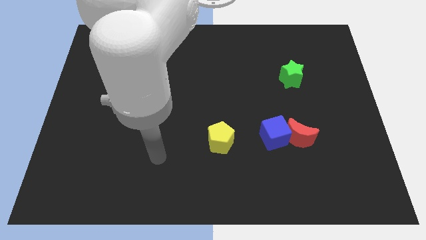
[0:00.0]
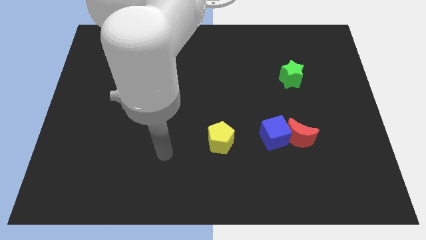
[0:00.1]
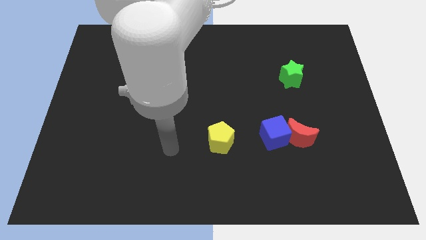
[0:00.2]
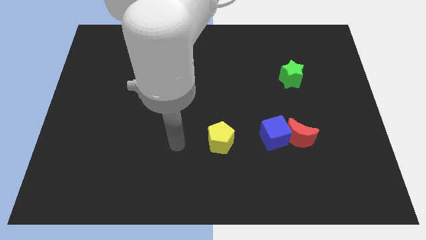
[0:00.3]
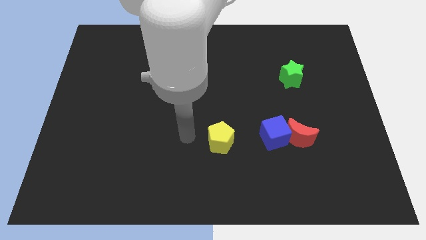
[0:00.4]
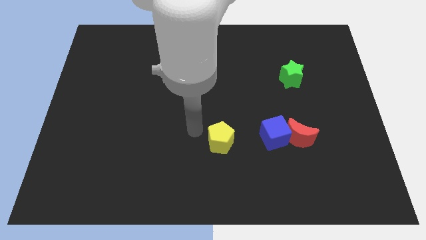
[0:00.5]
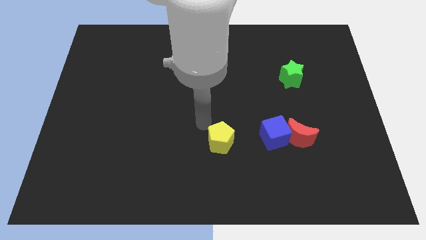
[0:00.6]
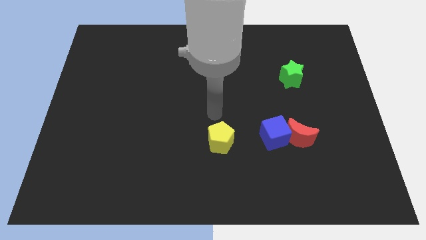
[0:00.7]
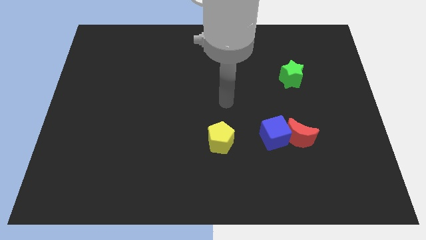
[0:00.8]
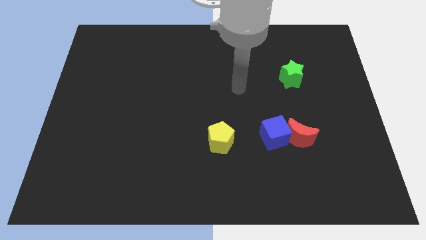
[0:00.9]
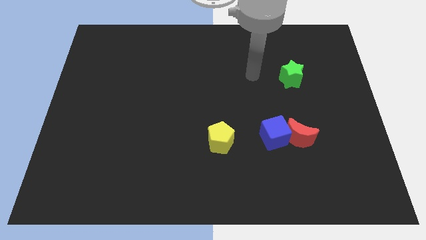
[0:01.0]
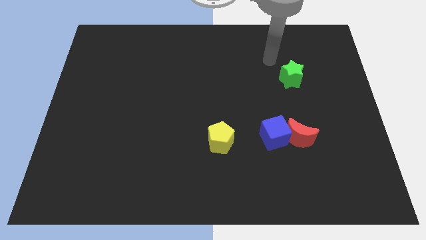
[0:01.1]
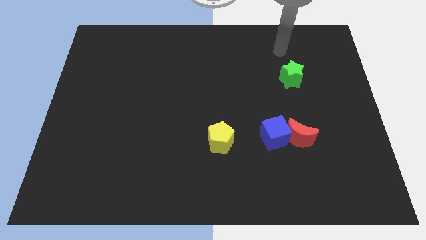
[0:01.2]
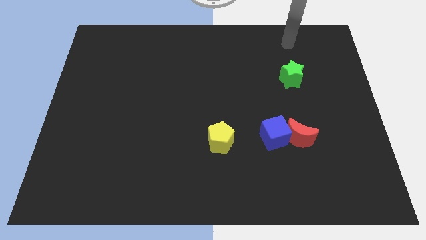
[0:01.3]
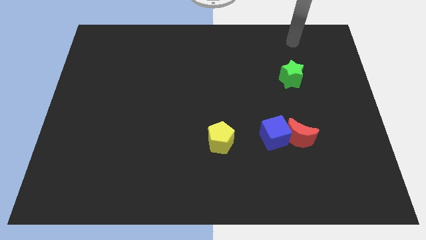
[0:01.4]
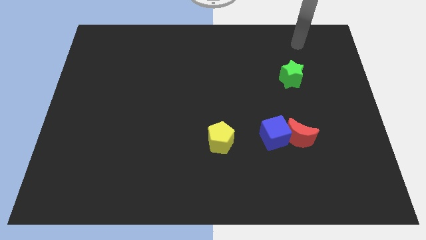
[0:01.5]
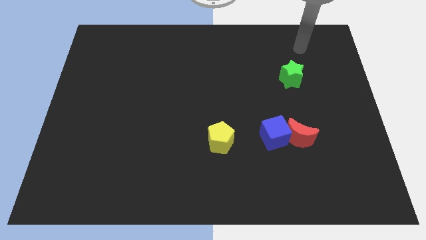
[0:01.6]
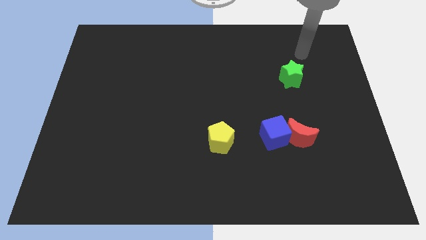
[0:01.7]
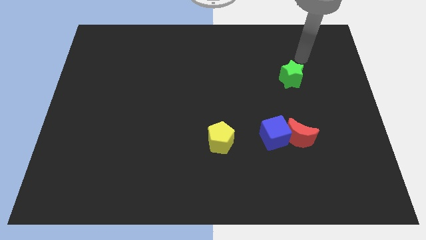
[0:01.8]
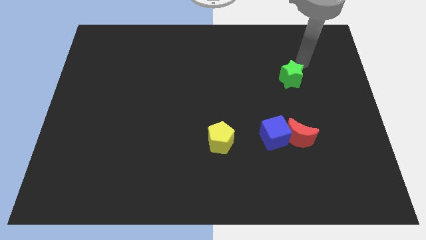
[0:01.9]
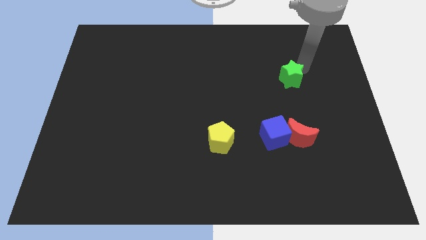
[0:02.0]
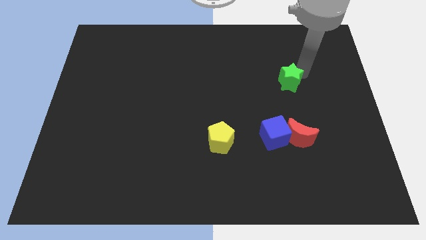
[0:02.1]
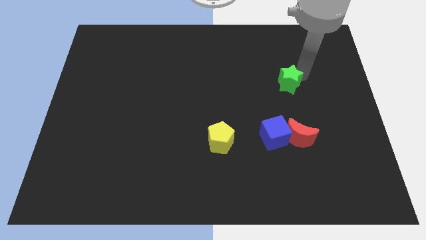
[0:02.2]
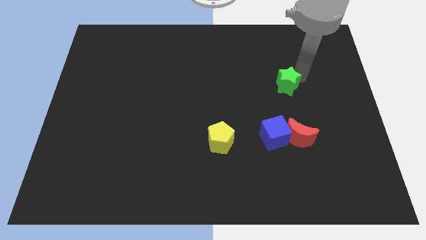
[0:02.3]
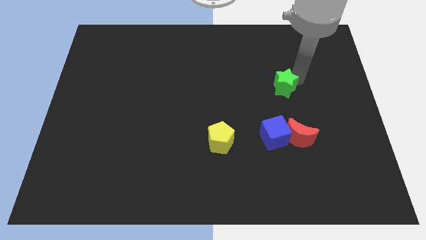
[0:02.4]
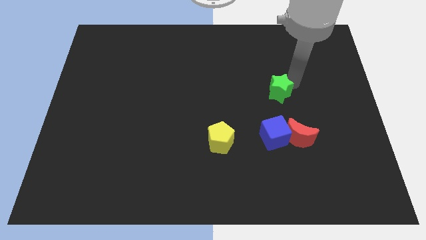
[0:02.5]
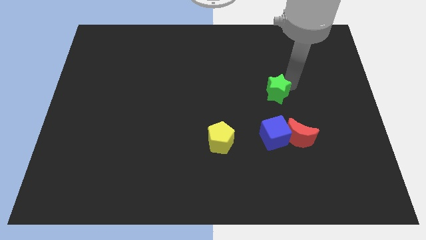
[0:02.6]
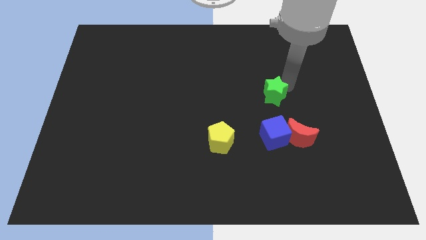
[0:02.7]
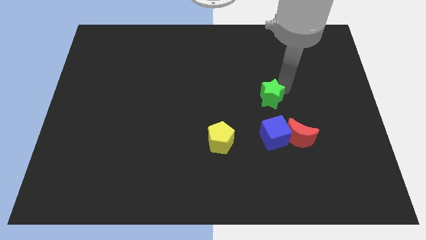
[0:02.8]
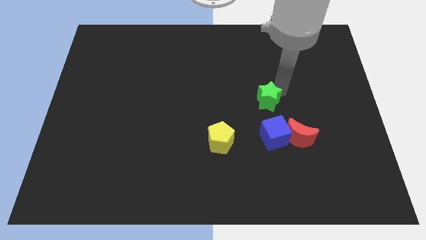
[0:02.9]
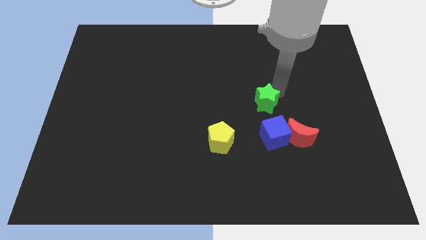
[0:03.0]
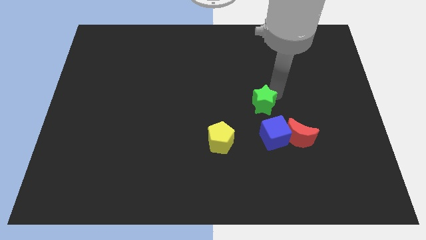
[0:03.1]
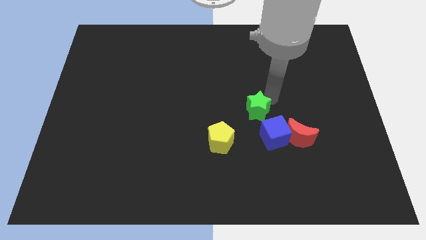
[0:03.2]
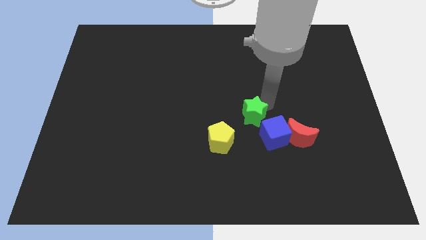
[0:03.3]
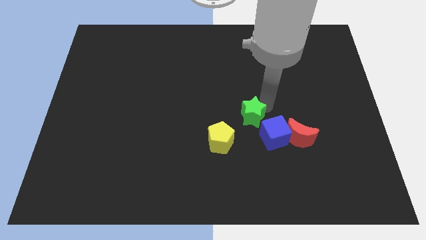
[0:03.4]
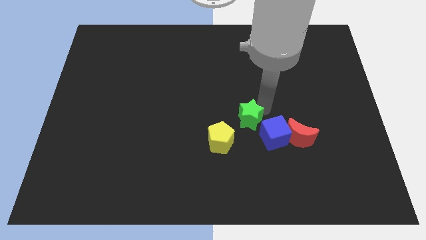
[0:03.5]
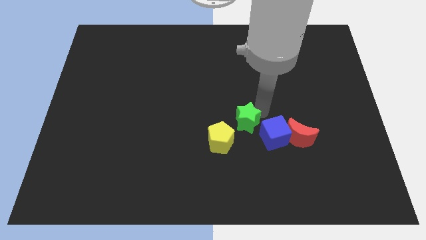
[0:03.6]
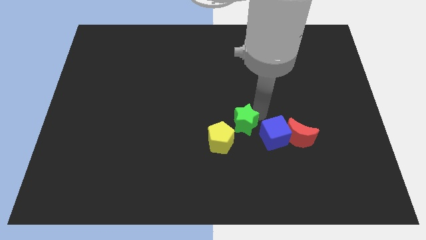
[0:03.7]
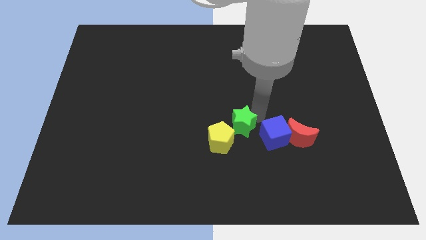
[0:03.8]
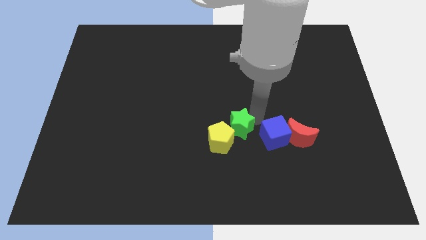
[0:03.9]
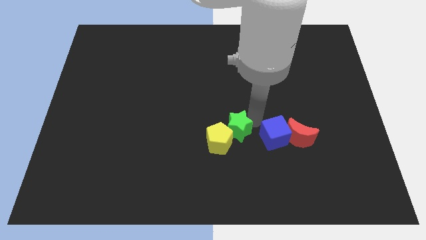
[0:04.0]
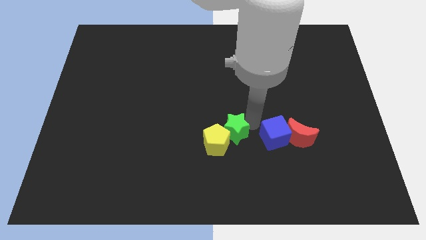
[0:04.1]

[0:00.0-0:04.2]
move the green star to the pentagon

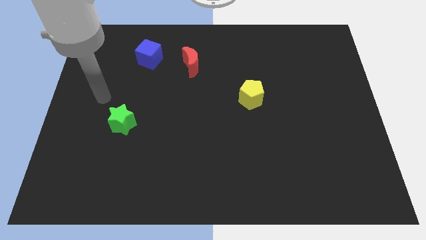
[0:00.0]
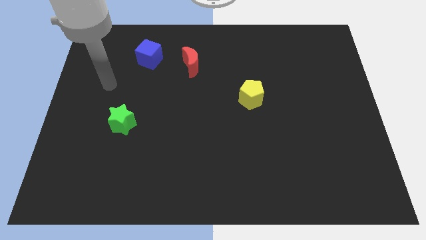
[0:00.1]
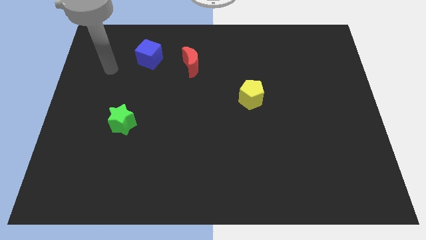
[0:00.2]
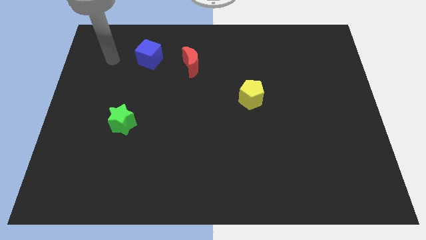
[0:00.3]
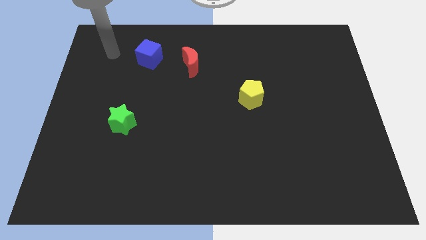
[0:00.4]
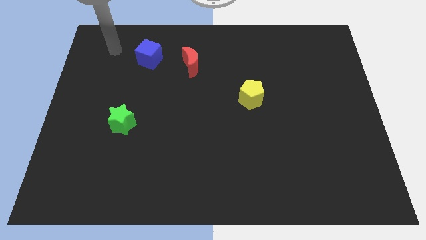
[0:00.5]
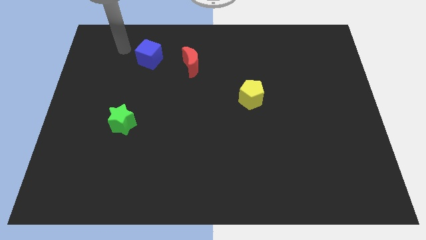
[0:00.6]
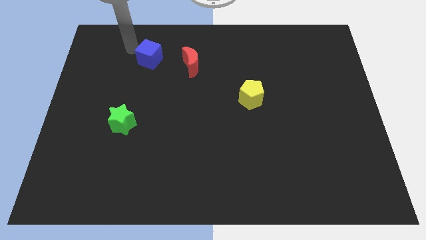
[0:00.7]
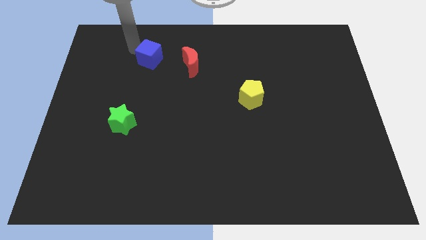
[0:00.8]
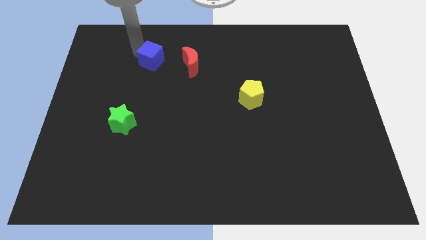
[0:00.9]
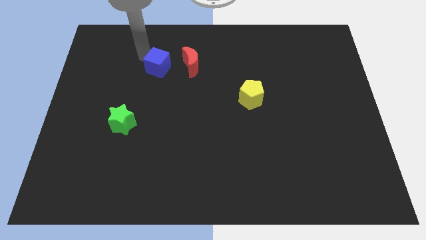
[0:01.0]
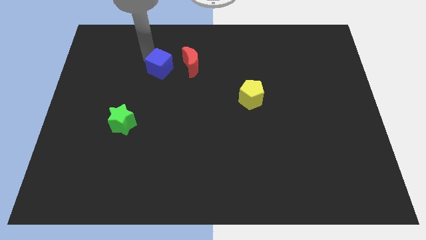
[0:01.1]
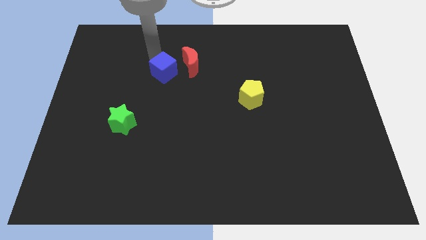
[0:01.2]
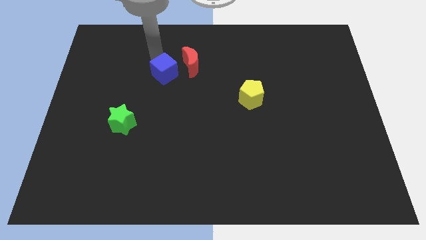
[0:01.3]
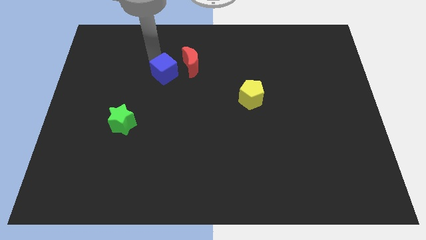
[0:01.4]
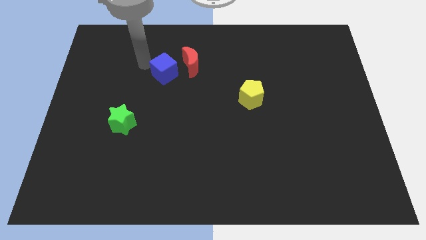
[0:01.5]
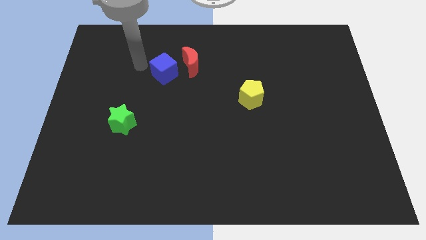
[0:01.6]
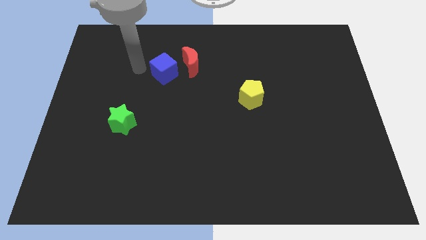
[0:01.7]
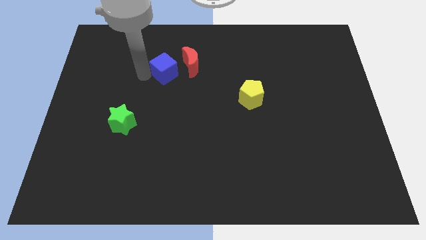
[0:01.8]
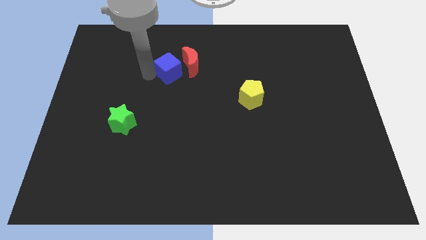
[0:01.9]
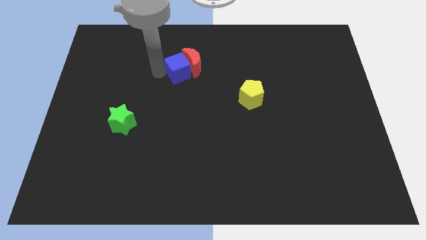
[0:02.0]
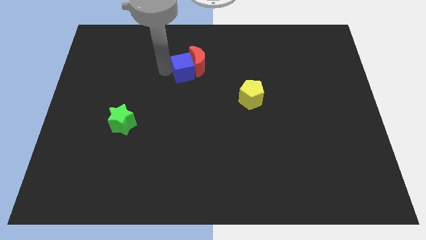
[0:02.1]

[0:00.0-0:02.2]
slide the blue block to the moon

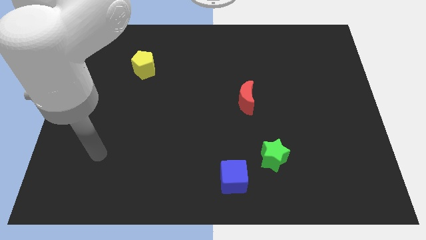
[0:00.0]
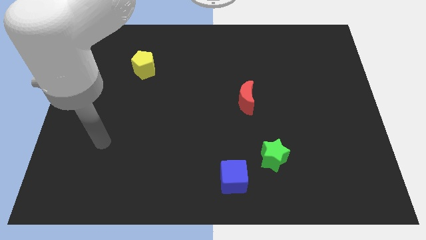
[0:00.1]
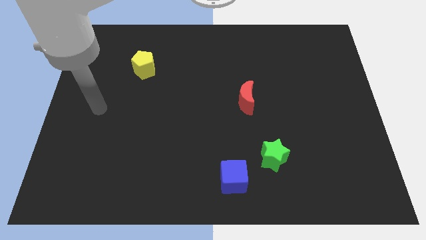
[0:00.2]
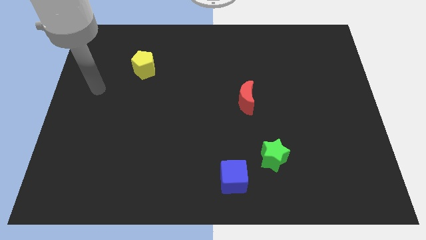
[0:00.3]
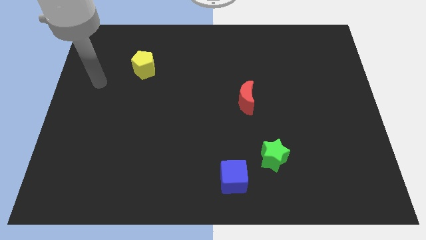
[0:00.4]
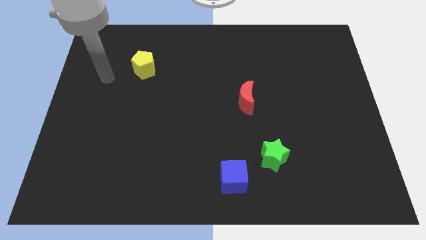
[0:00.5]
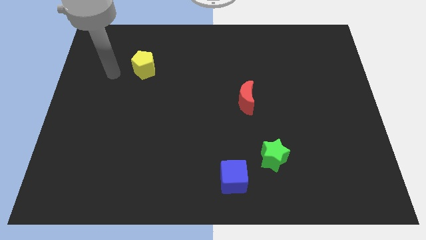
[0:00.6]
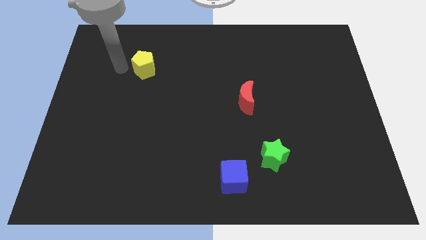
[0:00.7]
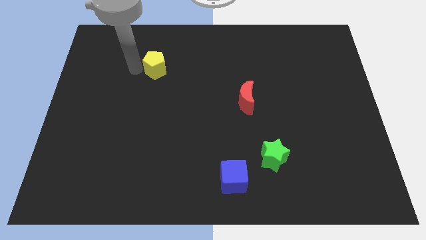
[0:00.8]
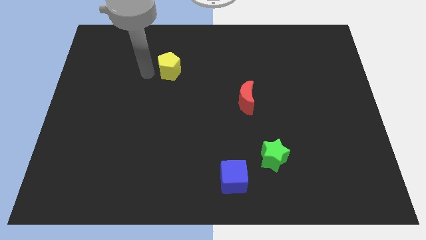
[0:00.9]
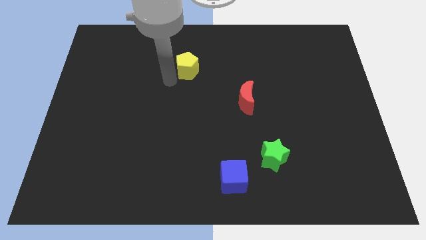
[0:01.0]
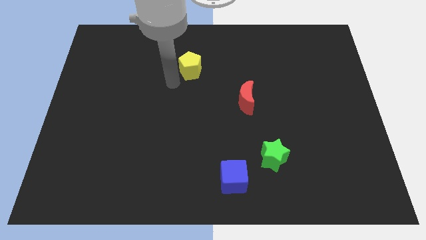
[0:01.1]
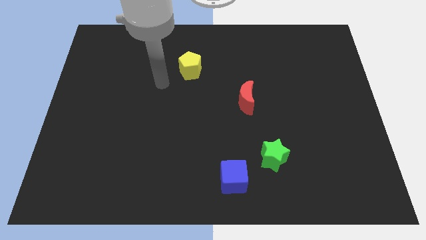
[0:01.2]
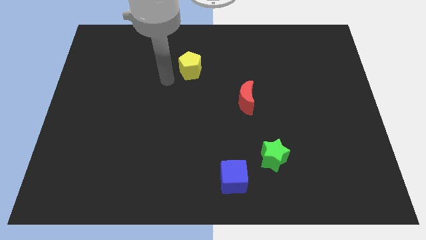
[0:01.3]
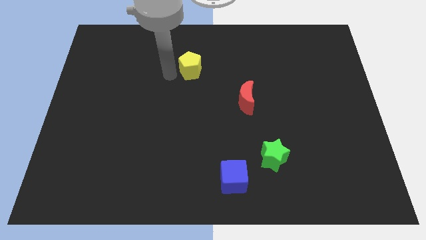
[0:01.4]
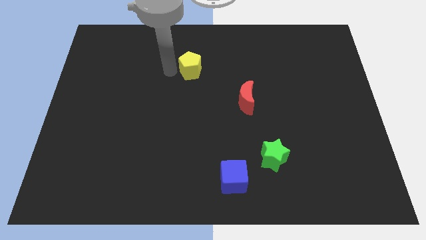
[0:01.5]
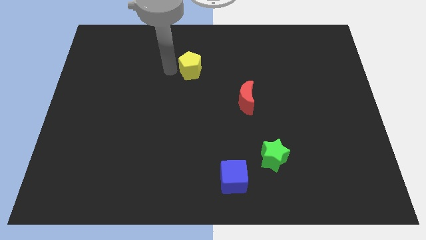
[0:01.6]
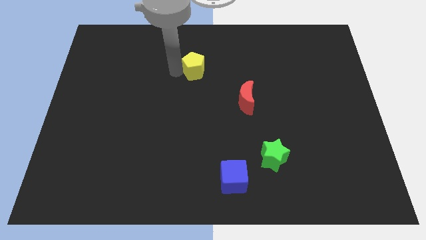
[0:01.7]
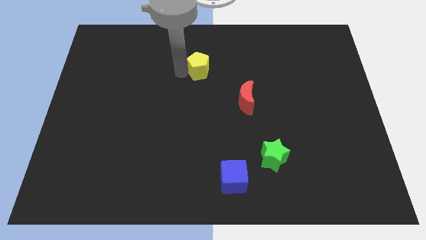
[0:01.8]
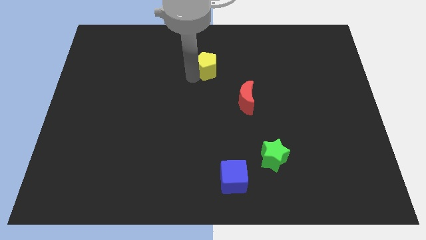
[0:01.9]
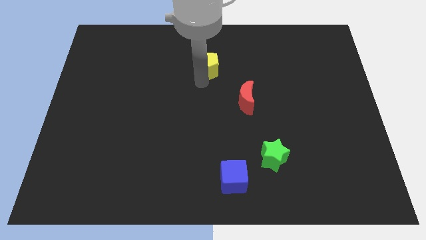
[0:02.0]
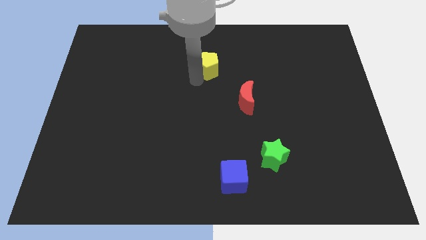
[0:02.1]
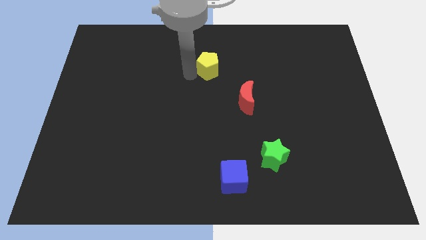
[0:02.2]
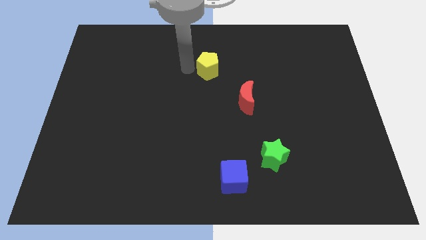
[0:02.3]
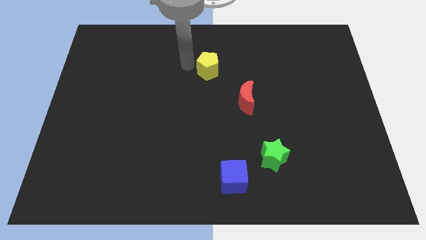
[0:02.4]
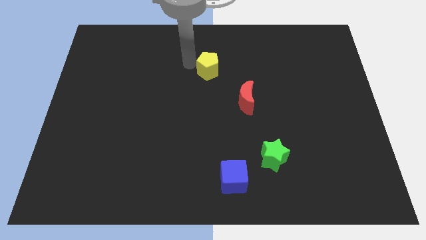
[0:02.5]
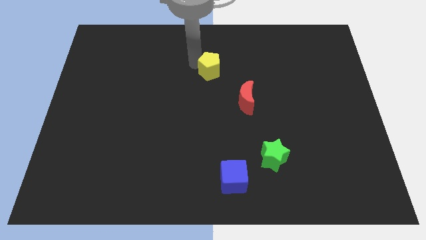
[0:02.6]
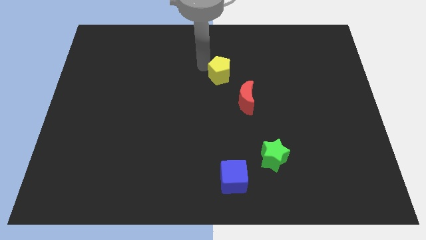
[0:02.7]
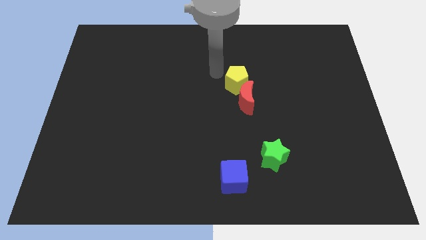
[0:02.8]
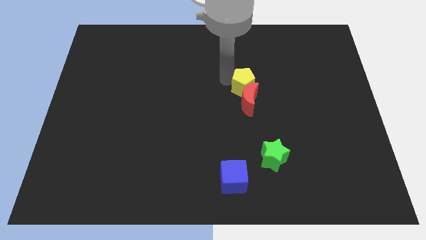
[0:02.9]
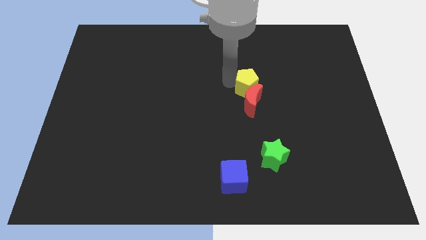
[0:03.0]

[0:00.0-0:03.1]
slide the yellow pentagon next to the red block
